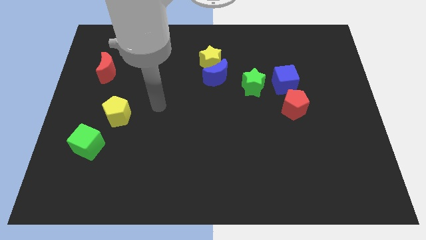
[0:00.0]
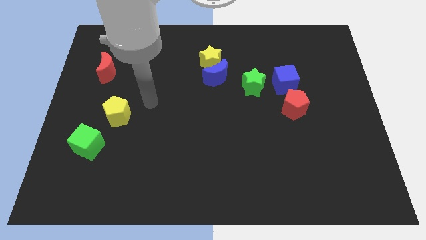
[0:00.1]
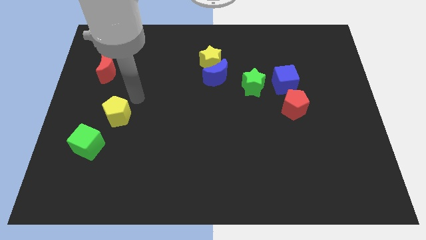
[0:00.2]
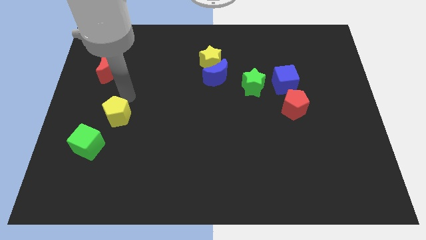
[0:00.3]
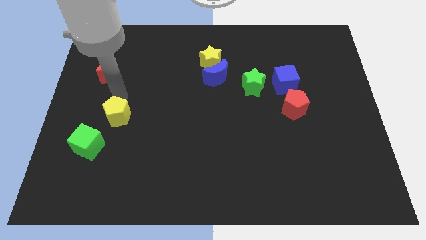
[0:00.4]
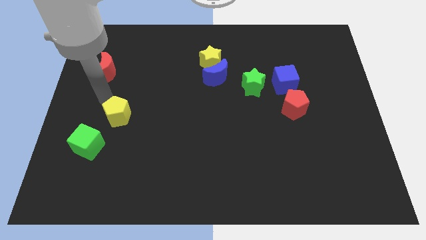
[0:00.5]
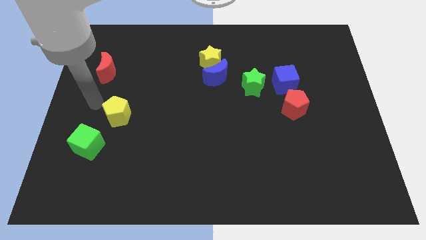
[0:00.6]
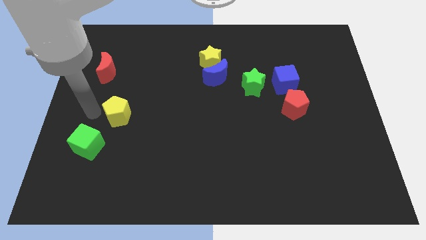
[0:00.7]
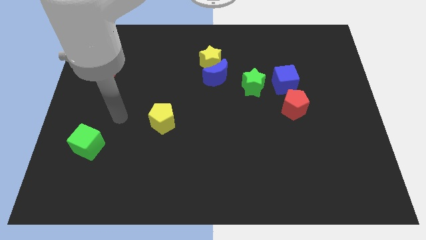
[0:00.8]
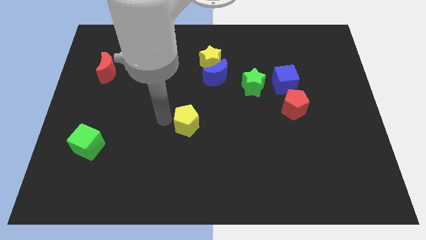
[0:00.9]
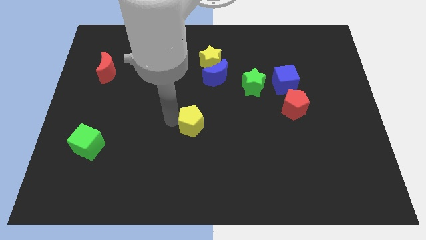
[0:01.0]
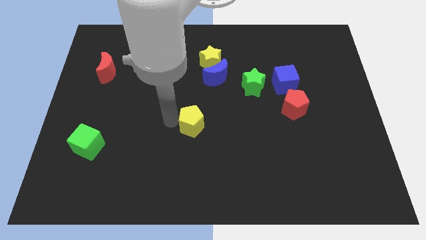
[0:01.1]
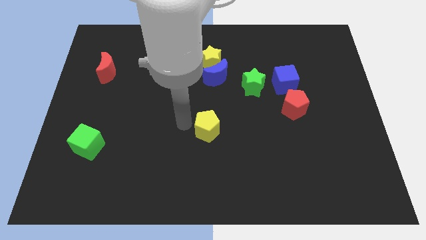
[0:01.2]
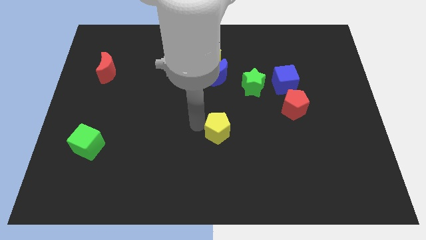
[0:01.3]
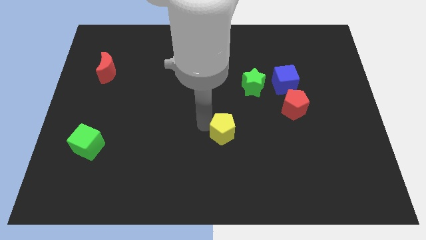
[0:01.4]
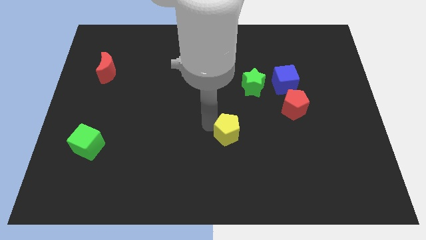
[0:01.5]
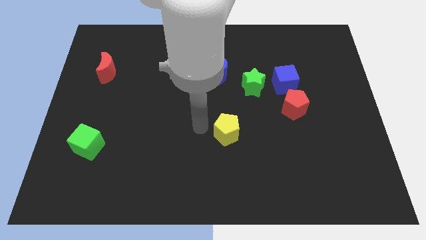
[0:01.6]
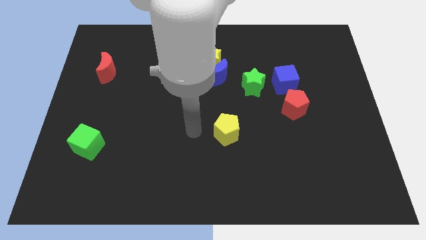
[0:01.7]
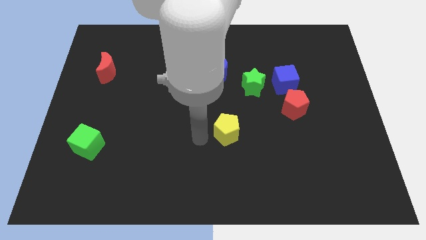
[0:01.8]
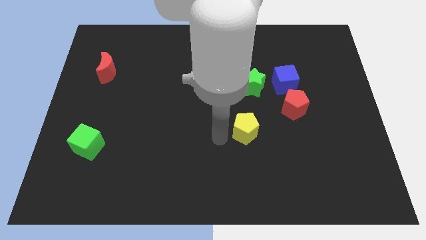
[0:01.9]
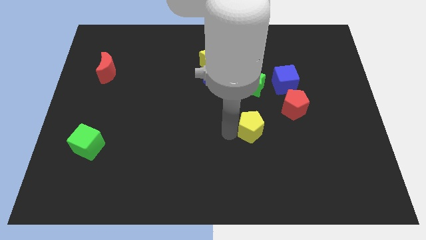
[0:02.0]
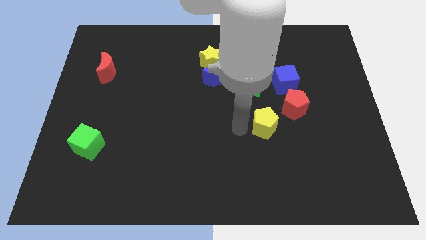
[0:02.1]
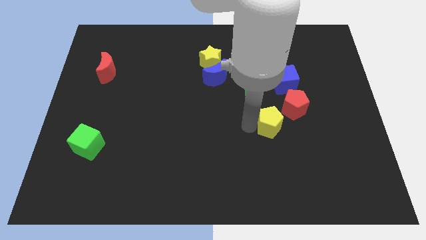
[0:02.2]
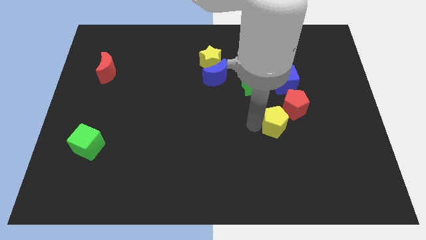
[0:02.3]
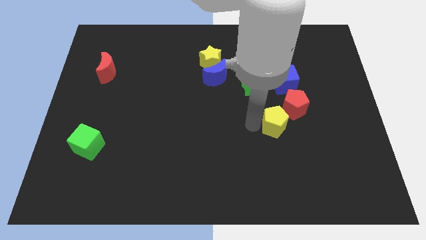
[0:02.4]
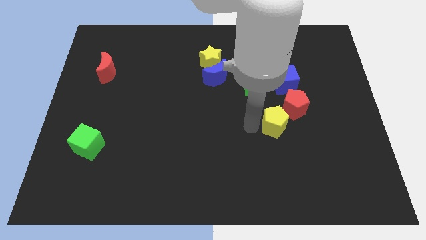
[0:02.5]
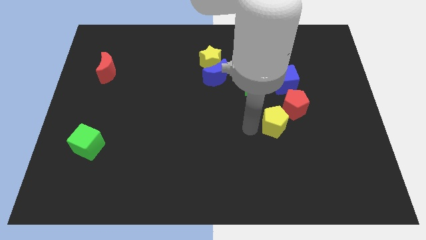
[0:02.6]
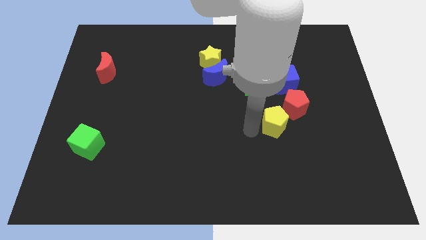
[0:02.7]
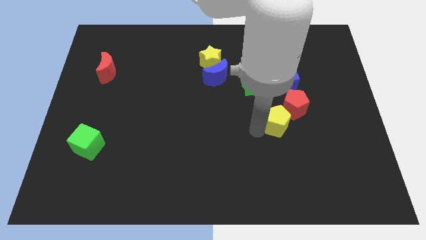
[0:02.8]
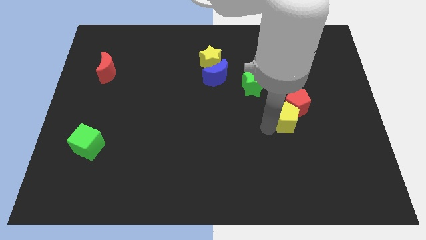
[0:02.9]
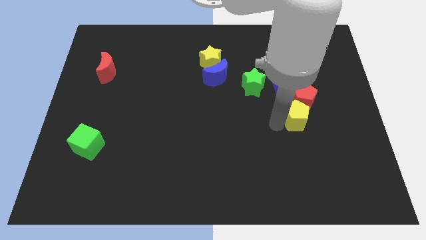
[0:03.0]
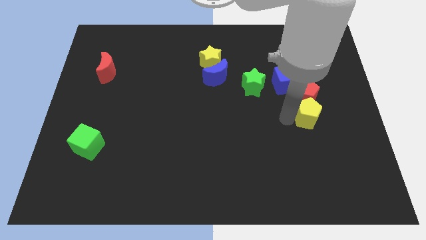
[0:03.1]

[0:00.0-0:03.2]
put the yellow pentagon next to the red pentagon

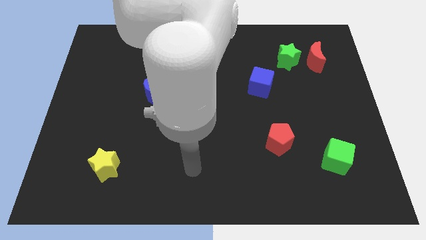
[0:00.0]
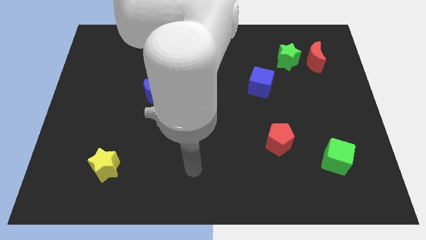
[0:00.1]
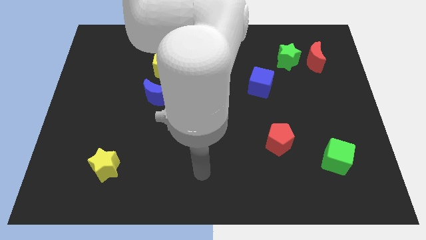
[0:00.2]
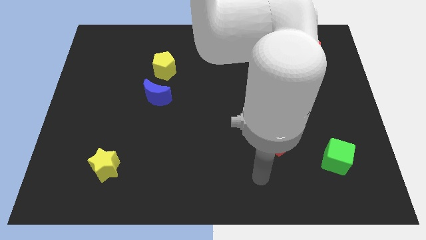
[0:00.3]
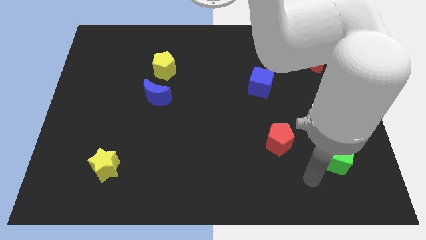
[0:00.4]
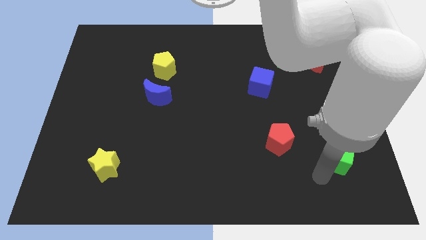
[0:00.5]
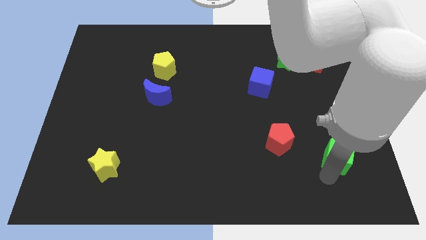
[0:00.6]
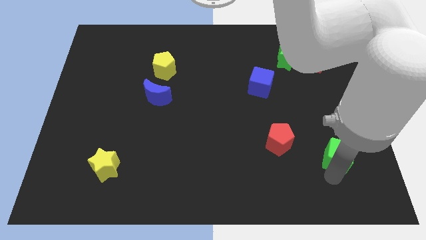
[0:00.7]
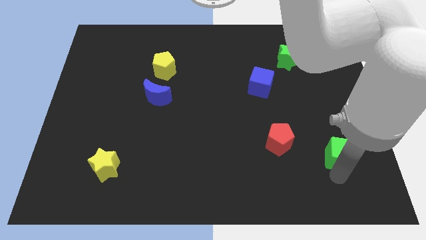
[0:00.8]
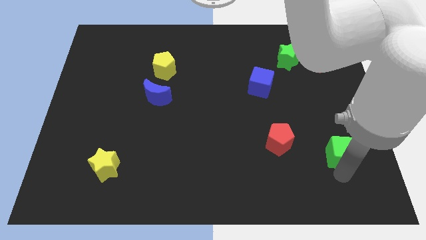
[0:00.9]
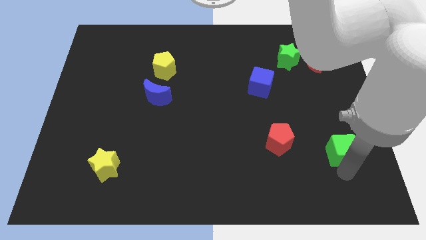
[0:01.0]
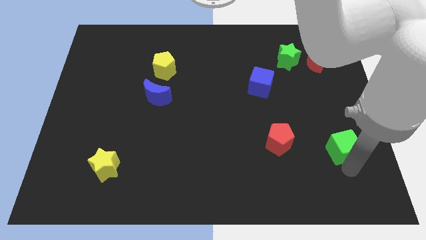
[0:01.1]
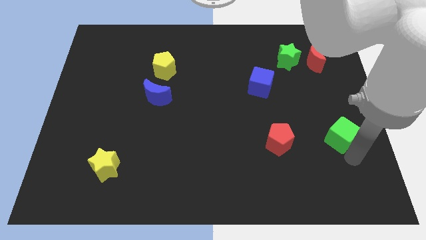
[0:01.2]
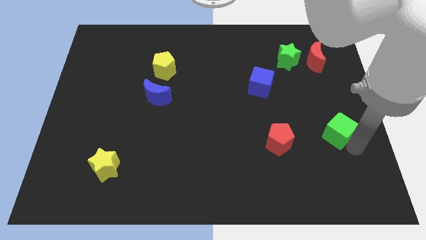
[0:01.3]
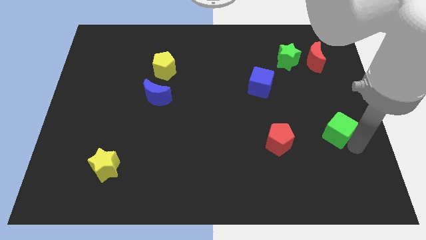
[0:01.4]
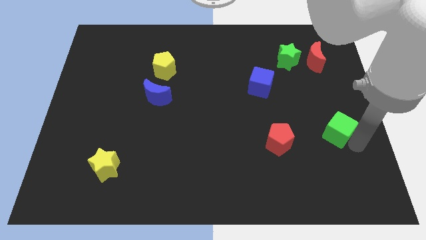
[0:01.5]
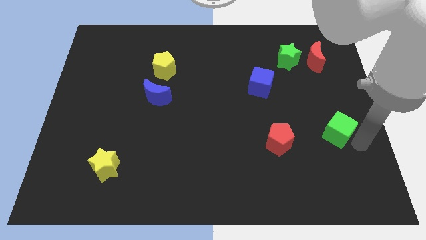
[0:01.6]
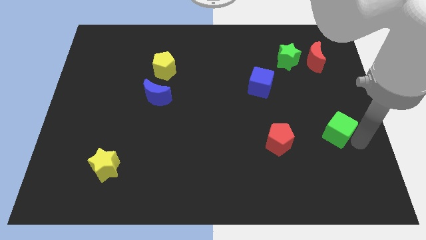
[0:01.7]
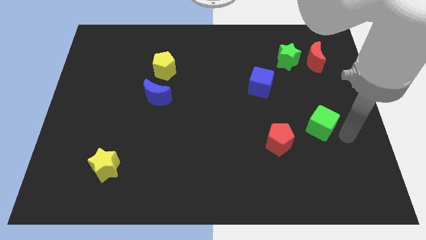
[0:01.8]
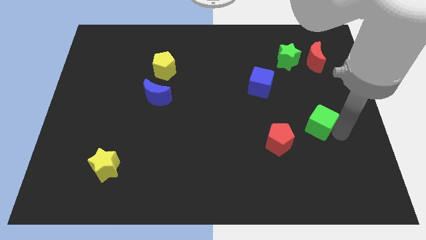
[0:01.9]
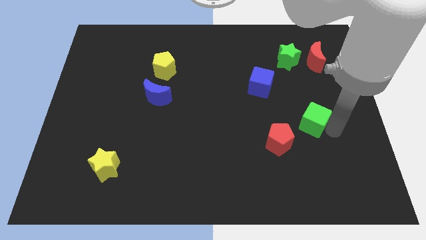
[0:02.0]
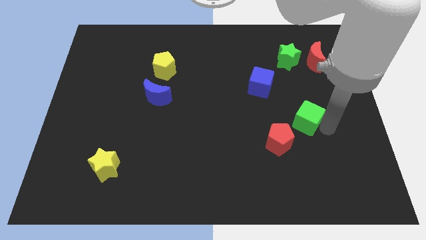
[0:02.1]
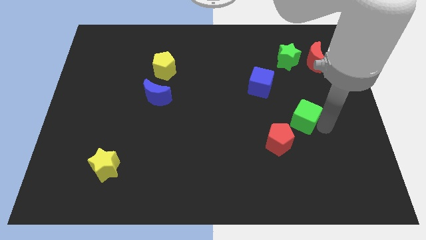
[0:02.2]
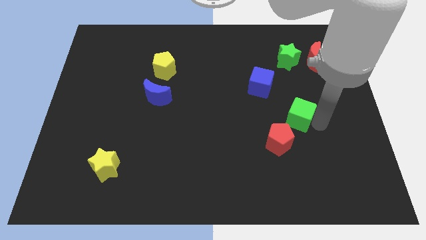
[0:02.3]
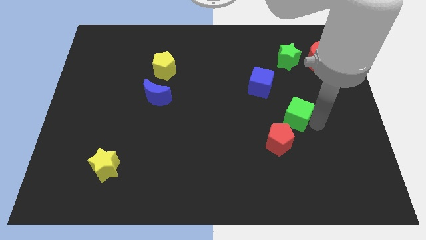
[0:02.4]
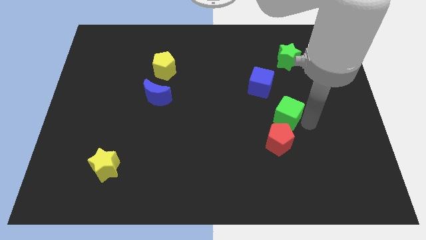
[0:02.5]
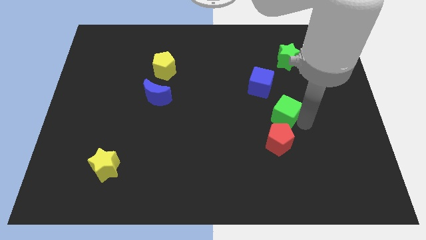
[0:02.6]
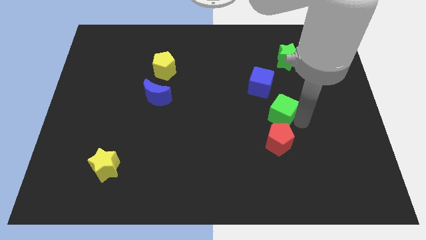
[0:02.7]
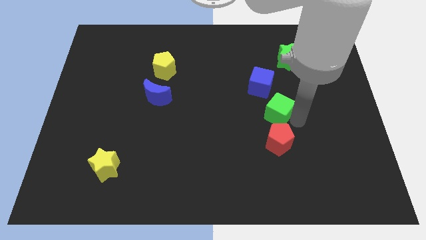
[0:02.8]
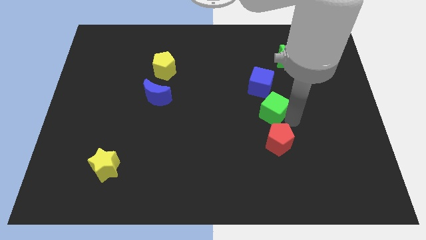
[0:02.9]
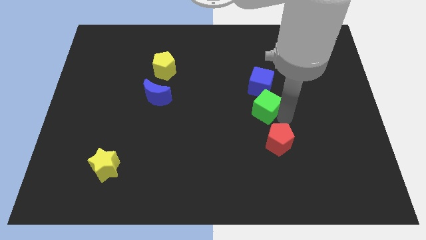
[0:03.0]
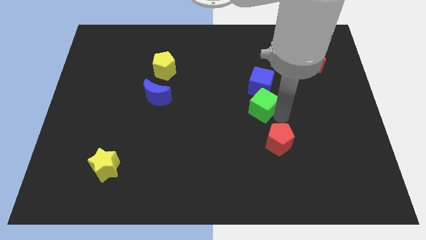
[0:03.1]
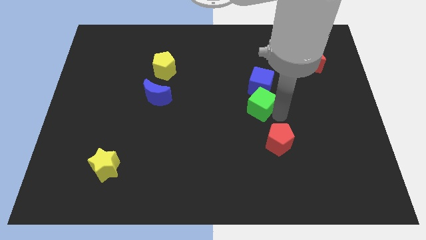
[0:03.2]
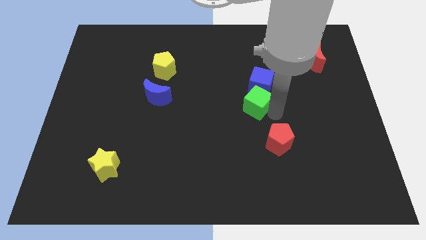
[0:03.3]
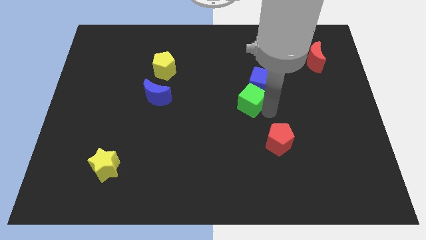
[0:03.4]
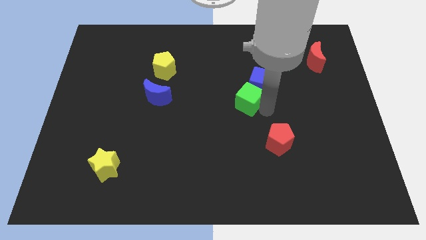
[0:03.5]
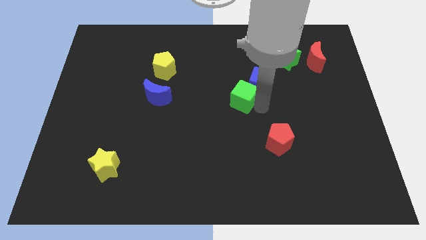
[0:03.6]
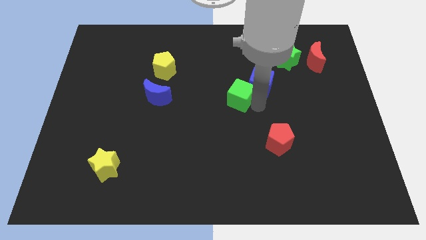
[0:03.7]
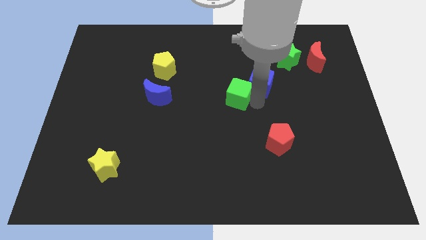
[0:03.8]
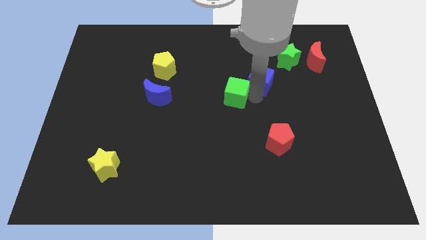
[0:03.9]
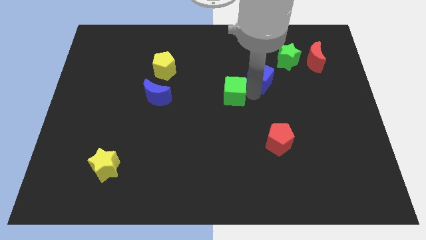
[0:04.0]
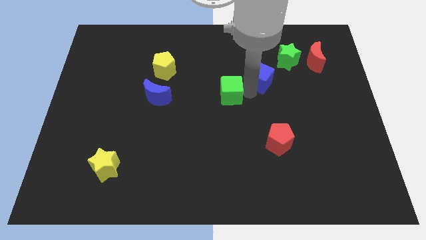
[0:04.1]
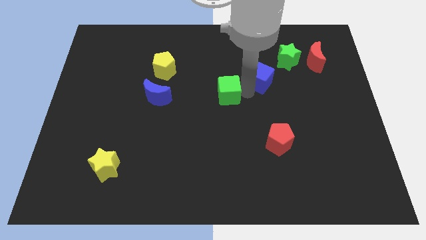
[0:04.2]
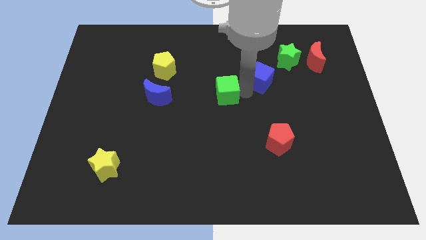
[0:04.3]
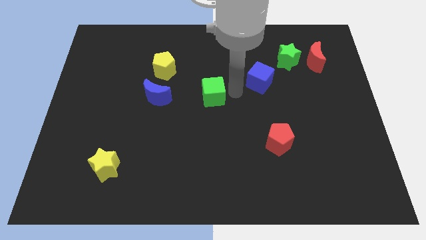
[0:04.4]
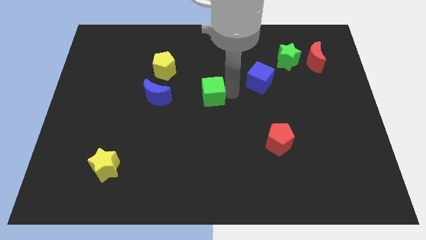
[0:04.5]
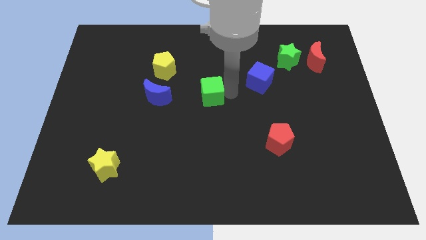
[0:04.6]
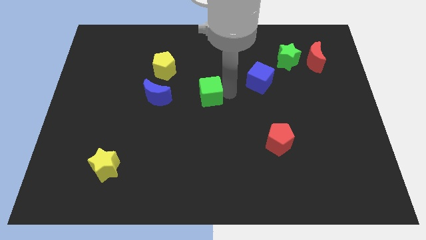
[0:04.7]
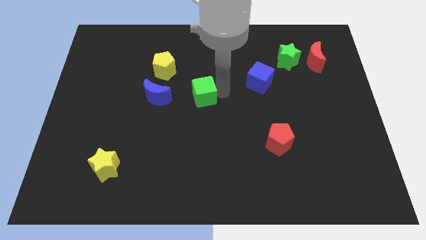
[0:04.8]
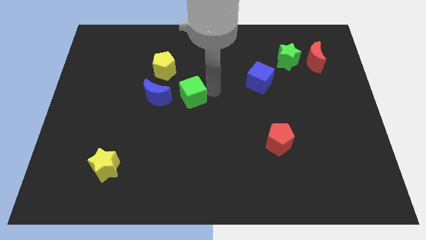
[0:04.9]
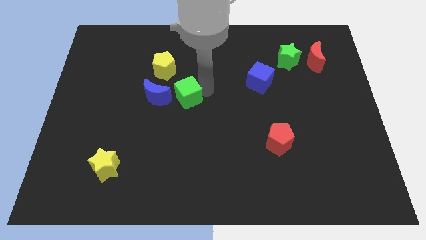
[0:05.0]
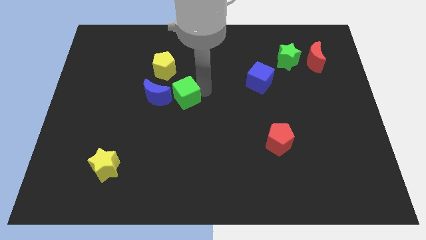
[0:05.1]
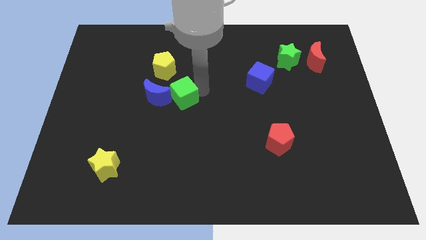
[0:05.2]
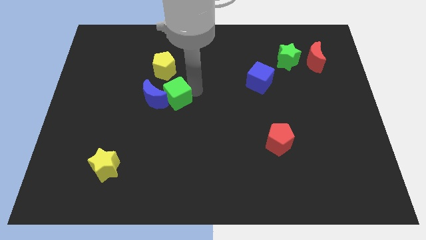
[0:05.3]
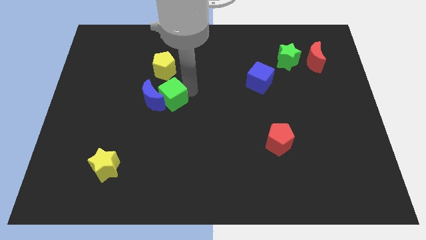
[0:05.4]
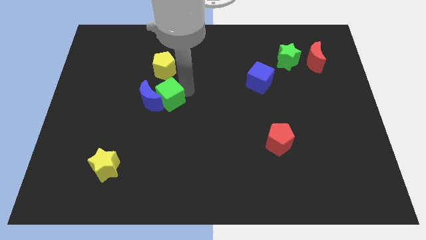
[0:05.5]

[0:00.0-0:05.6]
move the green cube towards the blue moon
